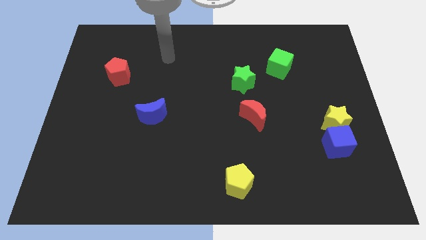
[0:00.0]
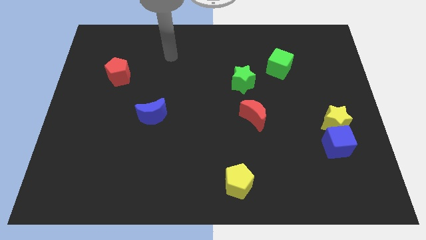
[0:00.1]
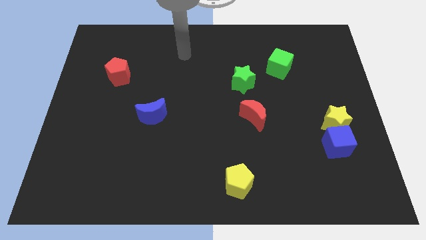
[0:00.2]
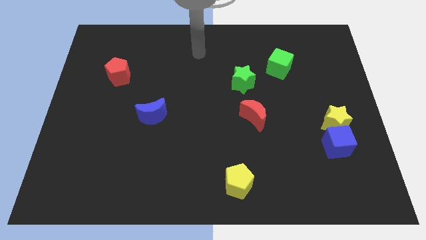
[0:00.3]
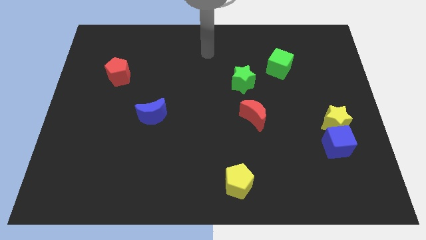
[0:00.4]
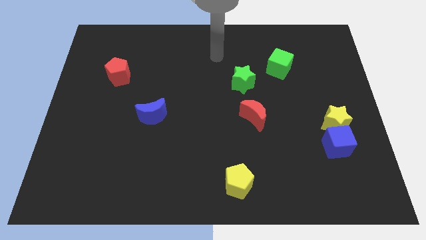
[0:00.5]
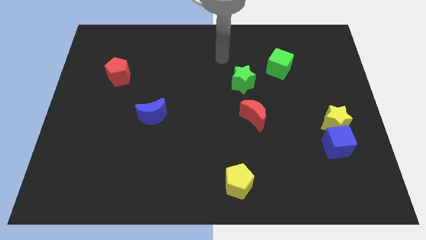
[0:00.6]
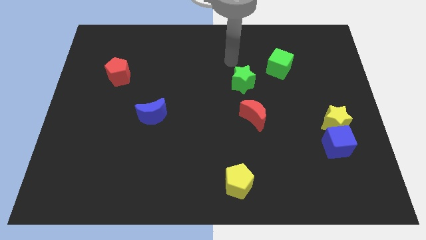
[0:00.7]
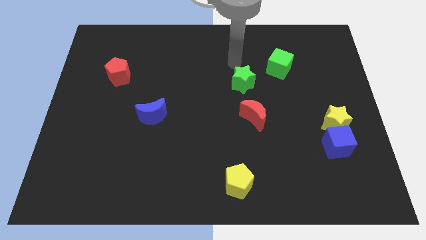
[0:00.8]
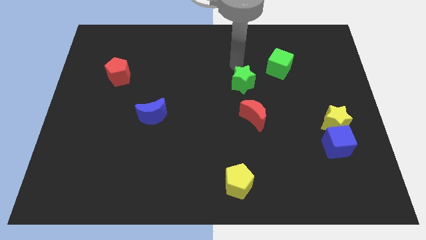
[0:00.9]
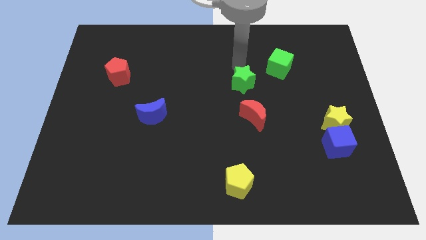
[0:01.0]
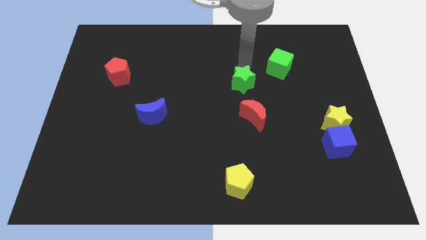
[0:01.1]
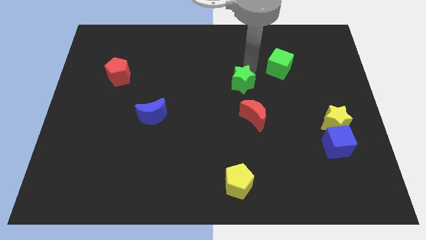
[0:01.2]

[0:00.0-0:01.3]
point your hand above the green star

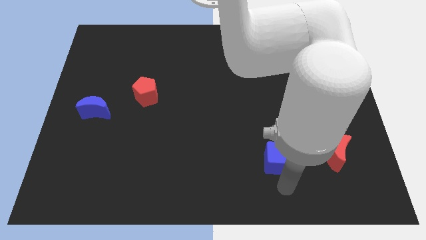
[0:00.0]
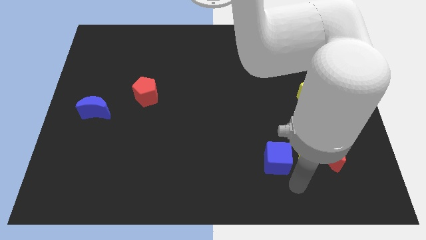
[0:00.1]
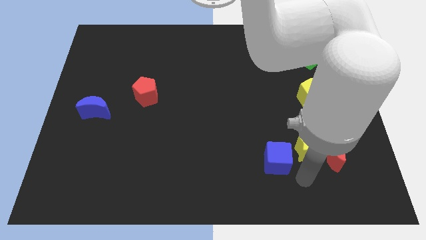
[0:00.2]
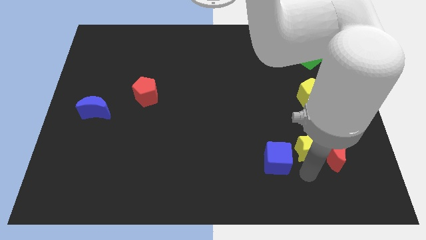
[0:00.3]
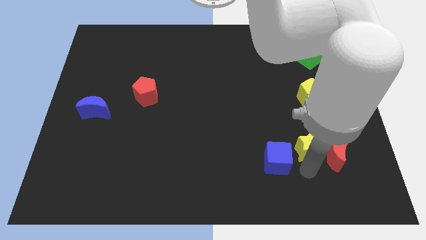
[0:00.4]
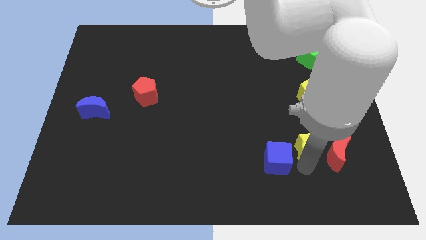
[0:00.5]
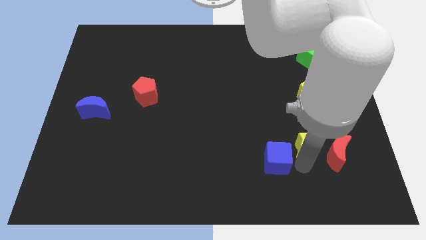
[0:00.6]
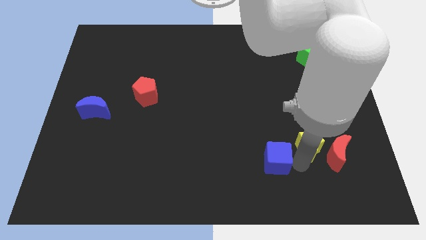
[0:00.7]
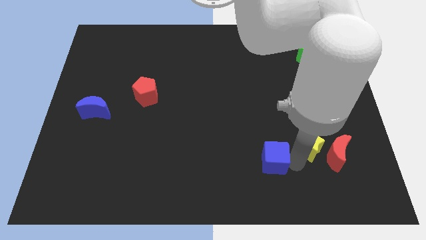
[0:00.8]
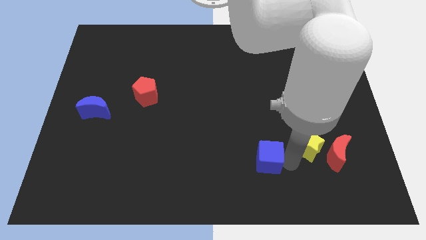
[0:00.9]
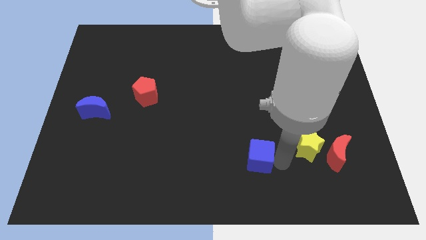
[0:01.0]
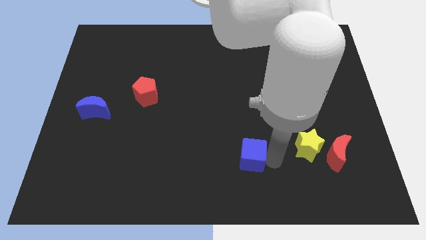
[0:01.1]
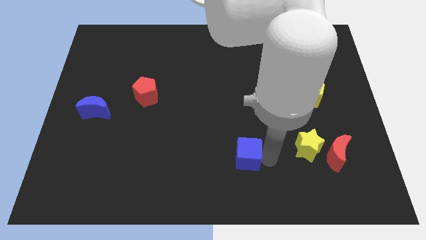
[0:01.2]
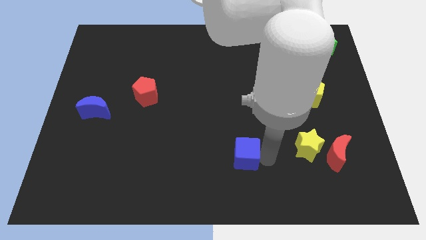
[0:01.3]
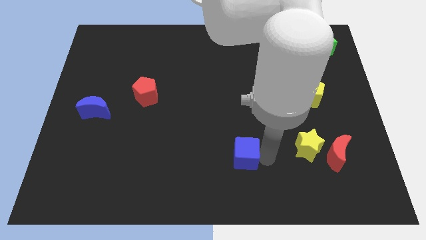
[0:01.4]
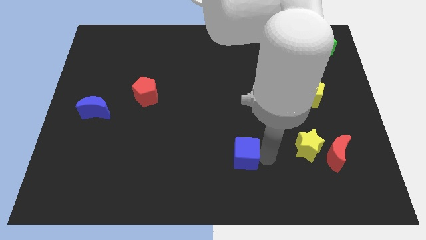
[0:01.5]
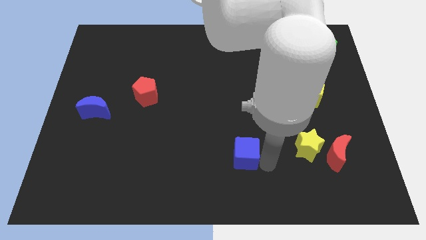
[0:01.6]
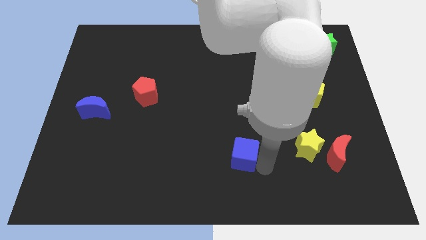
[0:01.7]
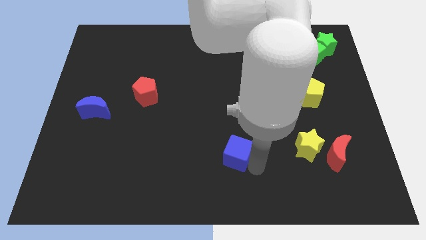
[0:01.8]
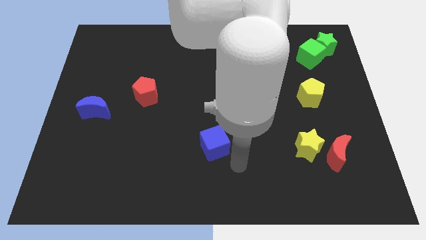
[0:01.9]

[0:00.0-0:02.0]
push the blue cube away from the yellow star

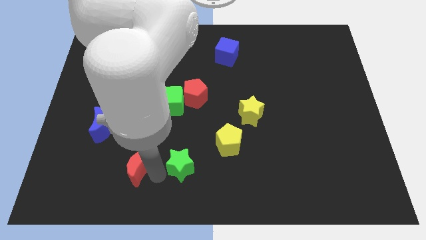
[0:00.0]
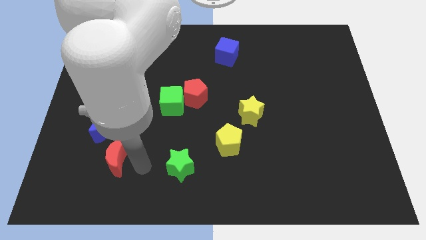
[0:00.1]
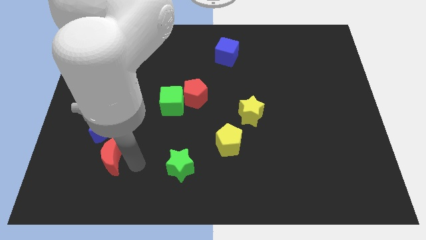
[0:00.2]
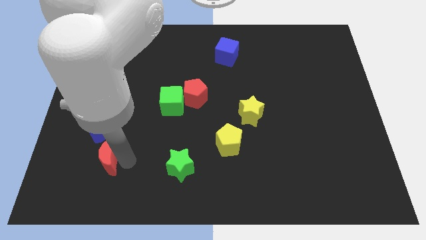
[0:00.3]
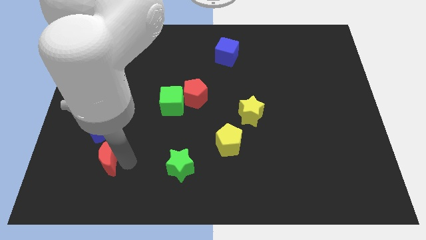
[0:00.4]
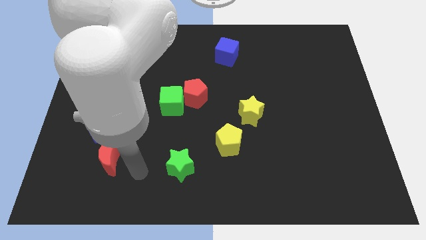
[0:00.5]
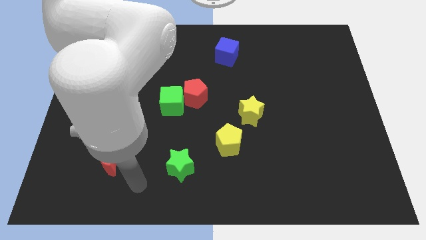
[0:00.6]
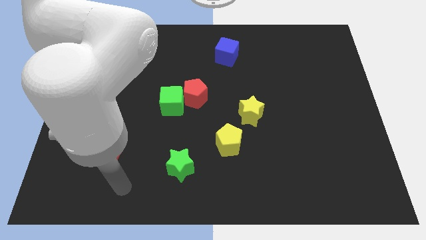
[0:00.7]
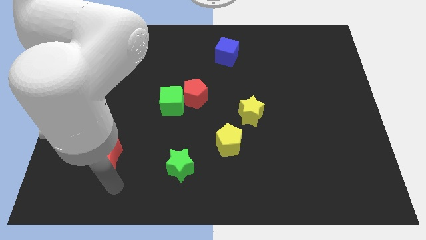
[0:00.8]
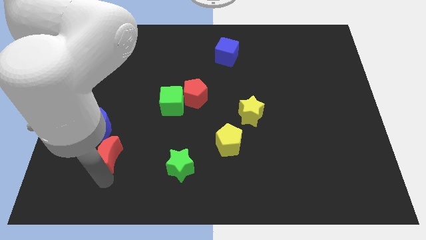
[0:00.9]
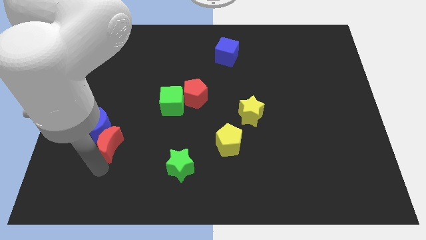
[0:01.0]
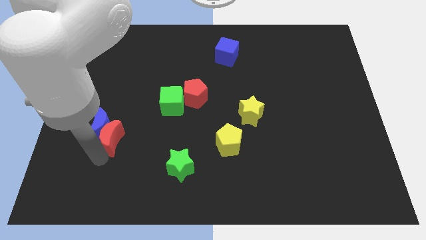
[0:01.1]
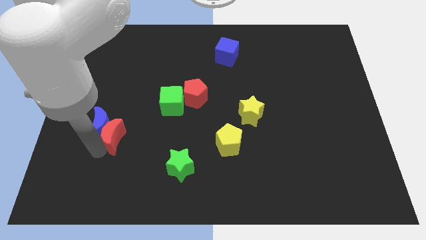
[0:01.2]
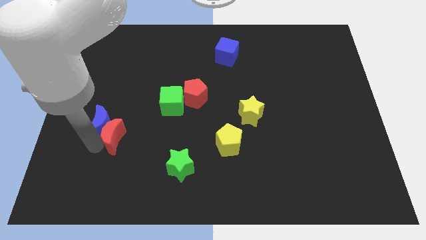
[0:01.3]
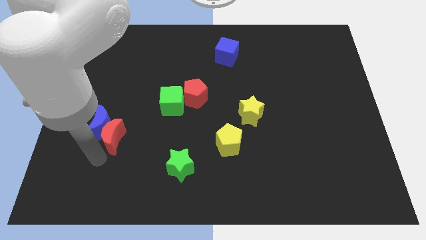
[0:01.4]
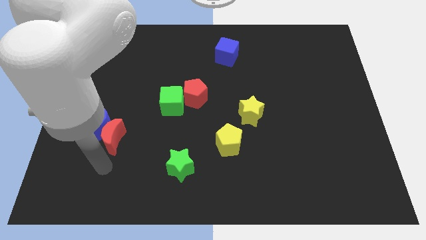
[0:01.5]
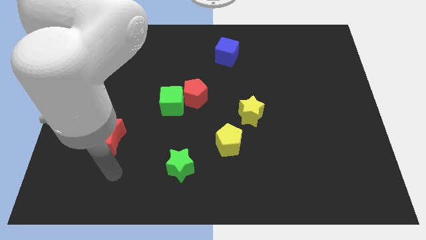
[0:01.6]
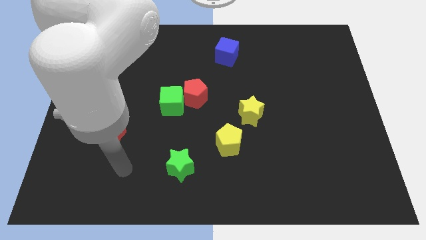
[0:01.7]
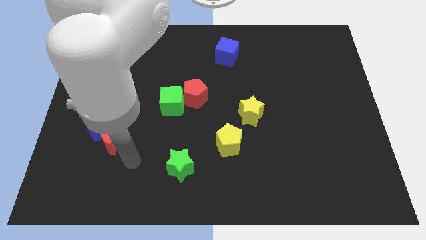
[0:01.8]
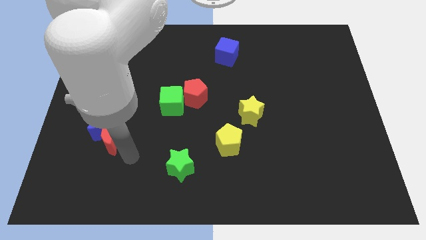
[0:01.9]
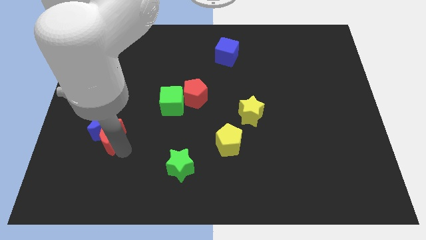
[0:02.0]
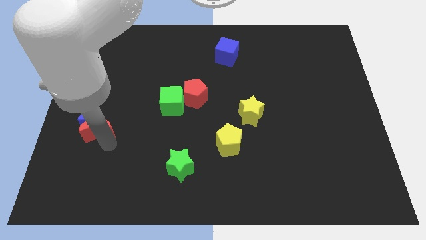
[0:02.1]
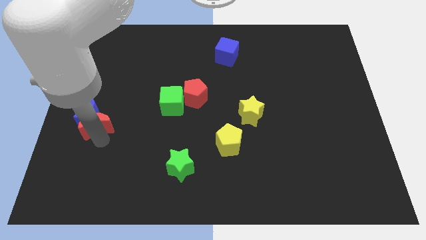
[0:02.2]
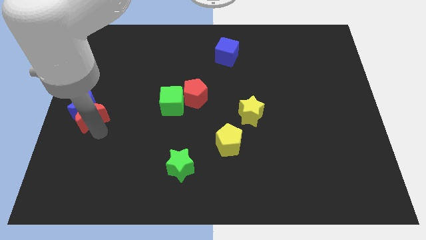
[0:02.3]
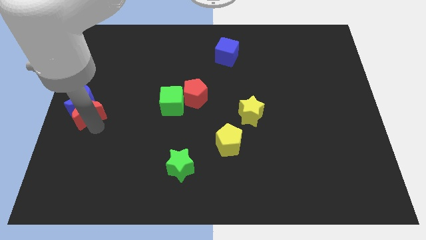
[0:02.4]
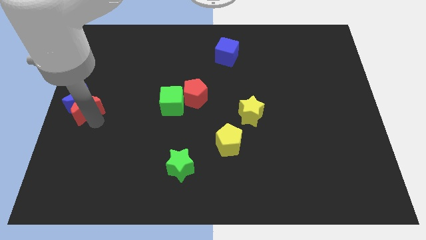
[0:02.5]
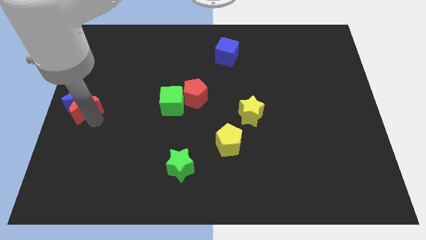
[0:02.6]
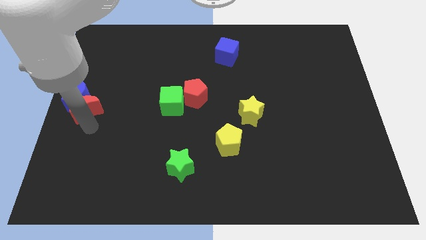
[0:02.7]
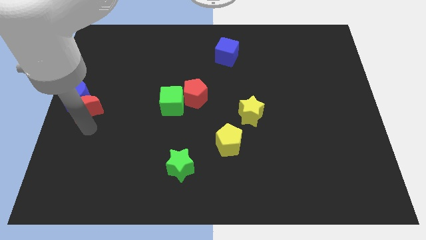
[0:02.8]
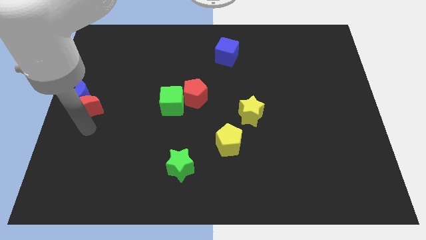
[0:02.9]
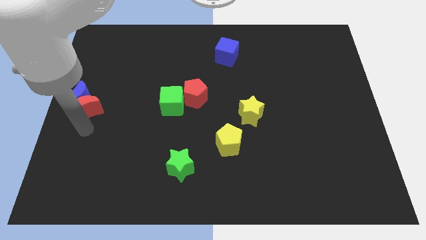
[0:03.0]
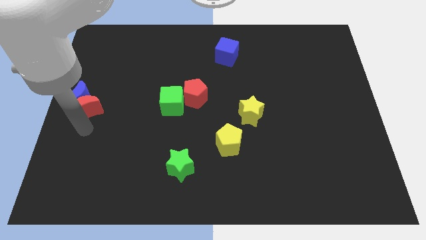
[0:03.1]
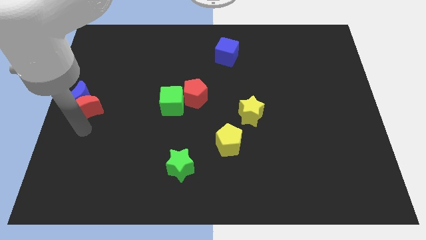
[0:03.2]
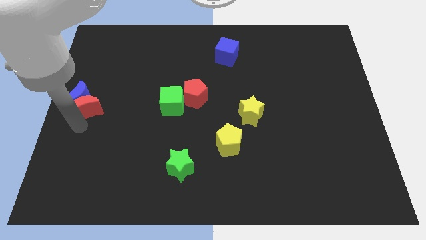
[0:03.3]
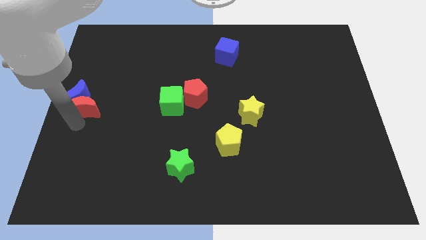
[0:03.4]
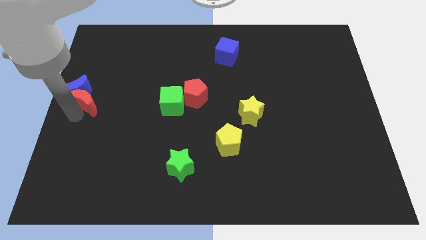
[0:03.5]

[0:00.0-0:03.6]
slide the blue moon and red moon to the left center of the board

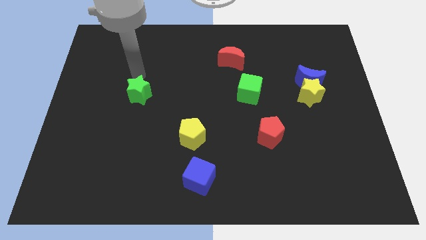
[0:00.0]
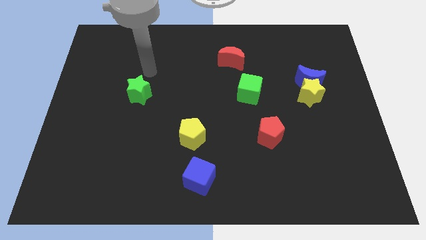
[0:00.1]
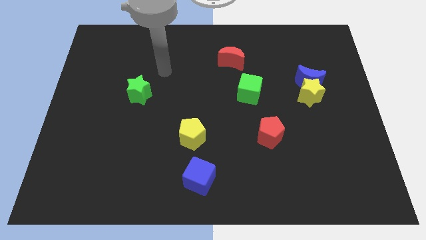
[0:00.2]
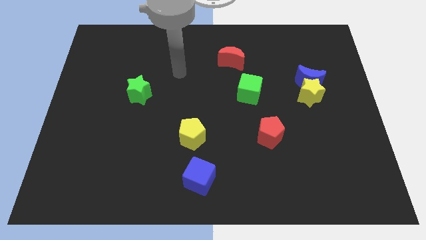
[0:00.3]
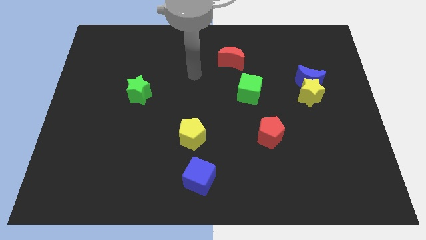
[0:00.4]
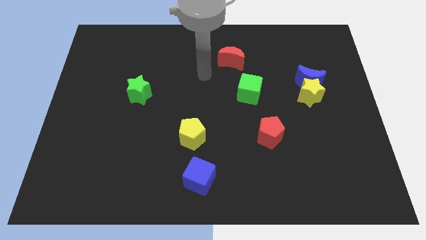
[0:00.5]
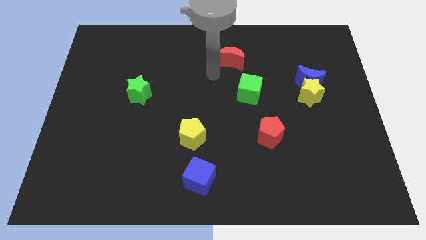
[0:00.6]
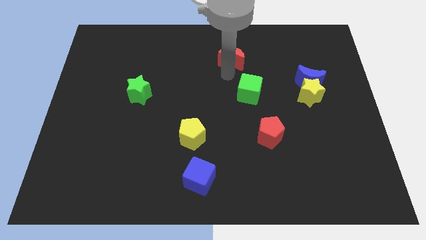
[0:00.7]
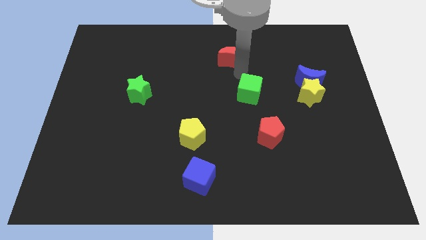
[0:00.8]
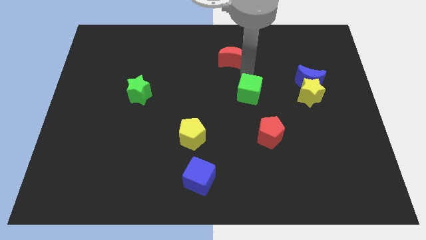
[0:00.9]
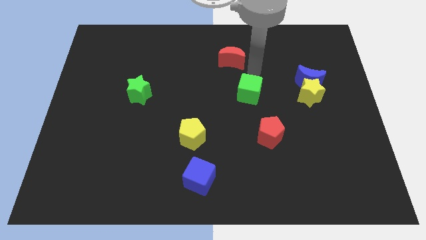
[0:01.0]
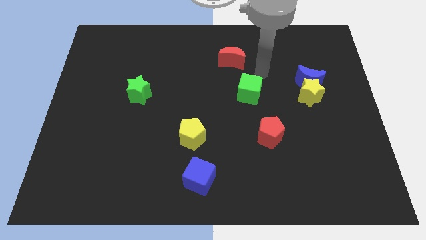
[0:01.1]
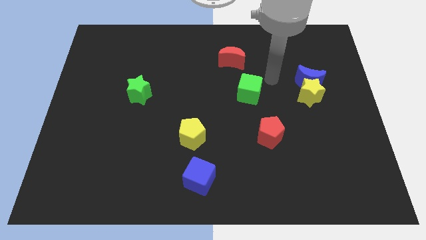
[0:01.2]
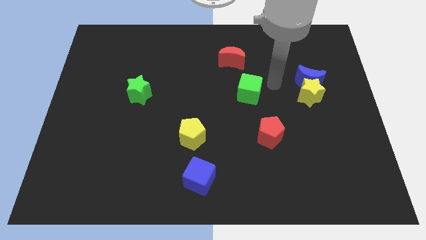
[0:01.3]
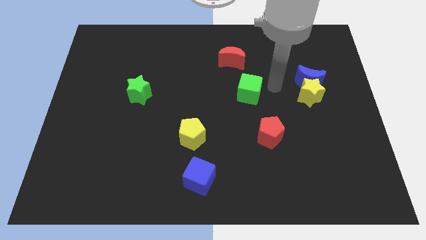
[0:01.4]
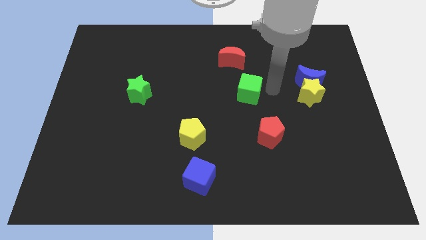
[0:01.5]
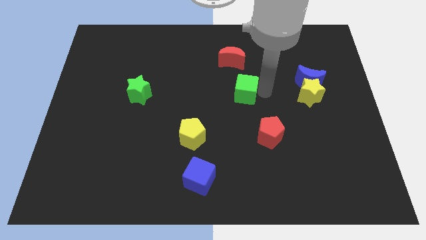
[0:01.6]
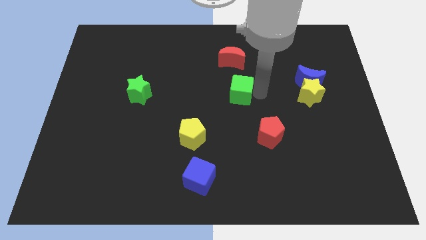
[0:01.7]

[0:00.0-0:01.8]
touch the right side of the green cube

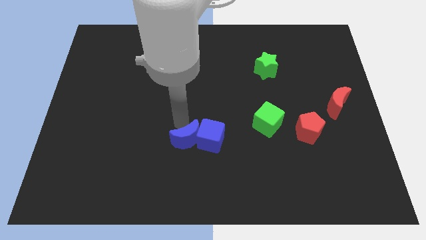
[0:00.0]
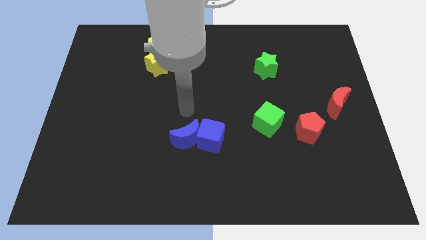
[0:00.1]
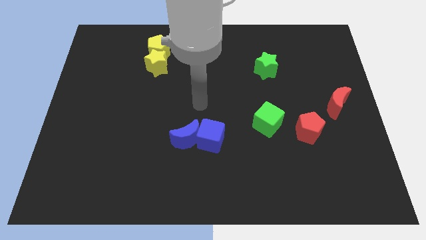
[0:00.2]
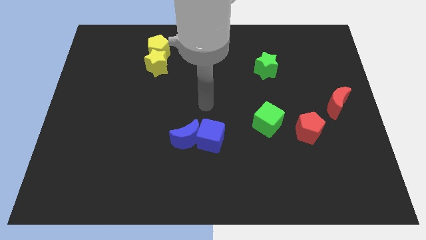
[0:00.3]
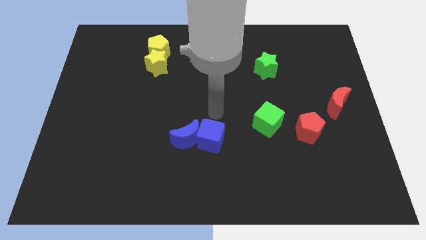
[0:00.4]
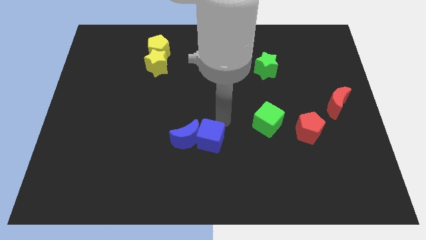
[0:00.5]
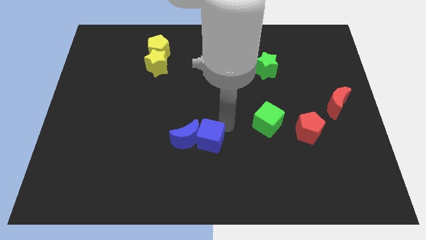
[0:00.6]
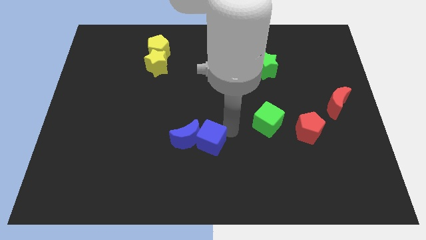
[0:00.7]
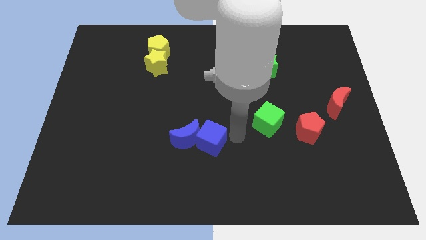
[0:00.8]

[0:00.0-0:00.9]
touch the blue cube
